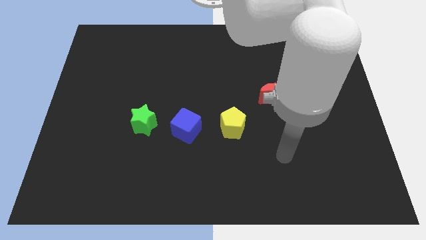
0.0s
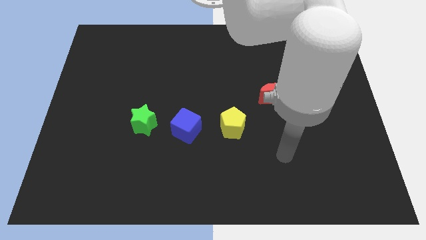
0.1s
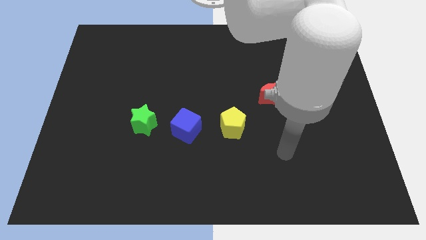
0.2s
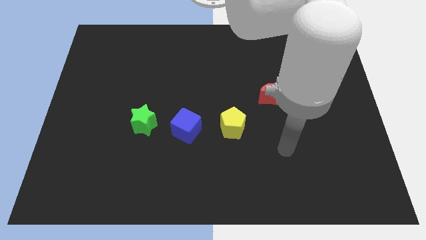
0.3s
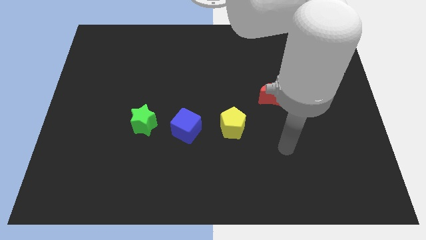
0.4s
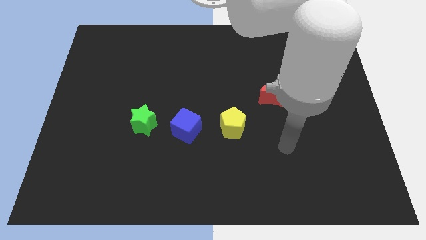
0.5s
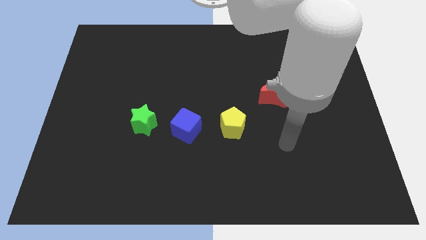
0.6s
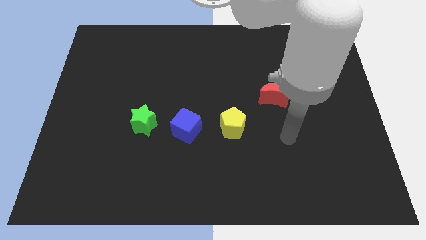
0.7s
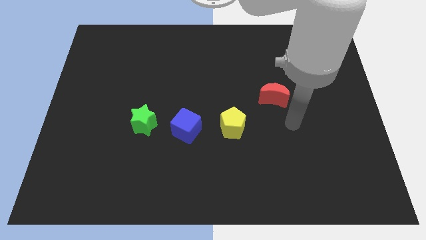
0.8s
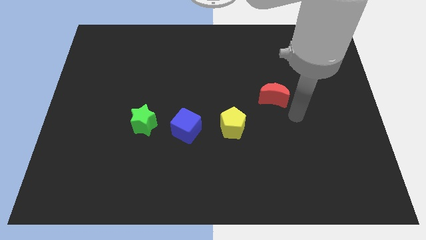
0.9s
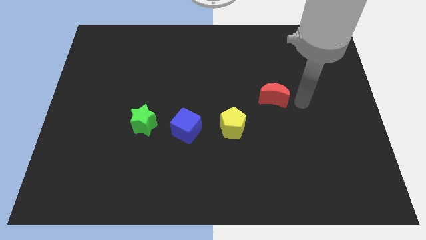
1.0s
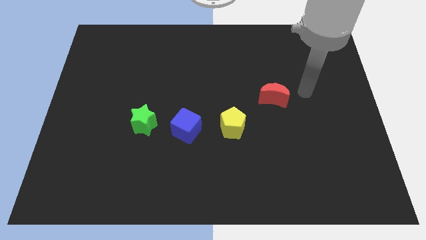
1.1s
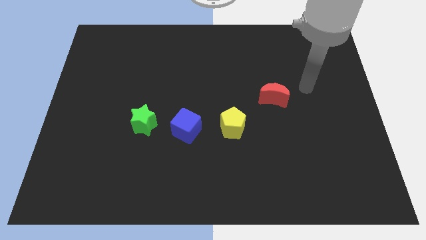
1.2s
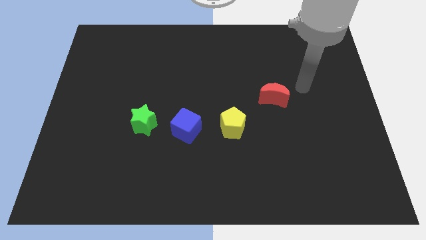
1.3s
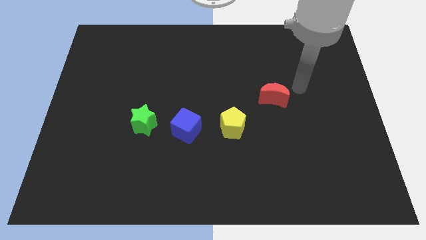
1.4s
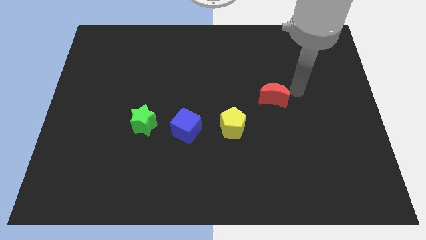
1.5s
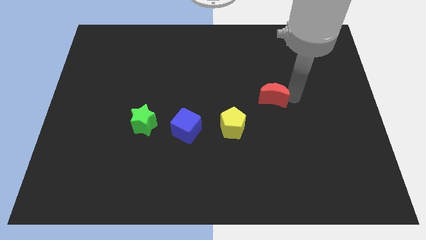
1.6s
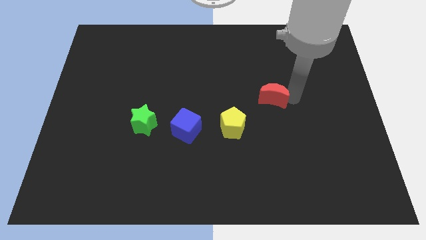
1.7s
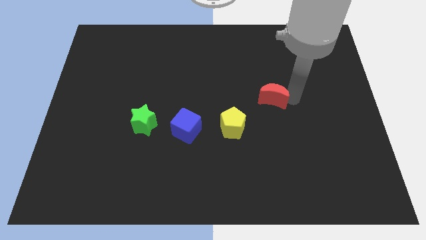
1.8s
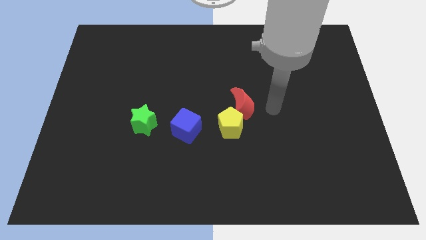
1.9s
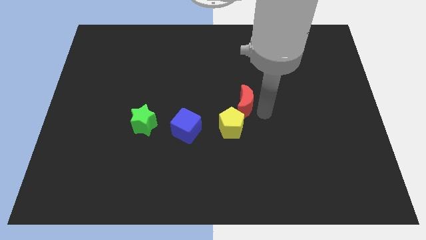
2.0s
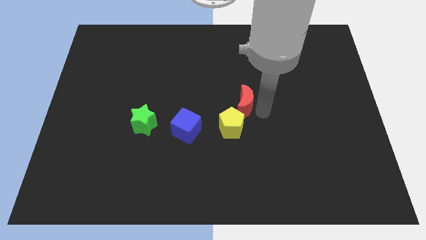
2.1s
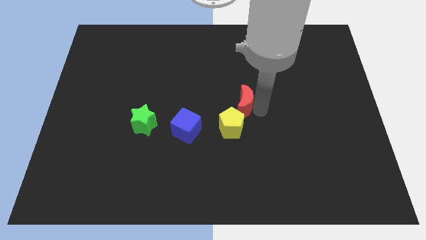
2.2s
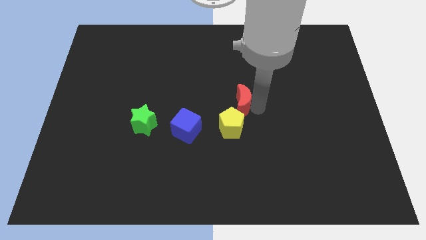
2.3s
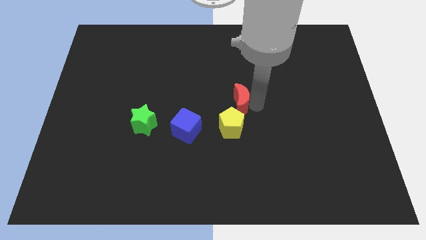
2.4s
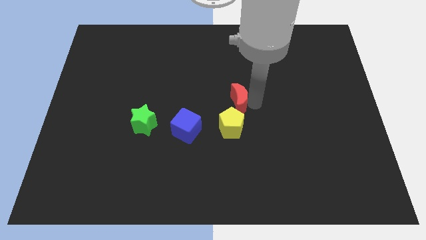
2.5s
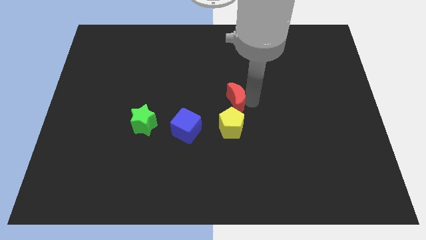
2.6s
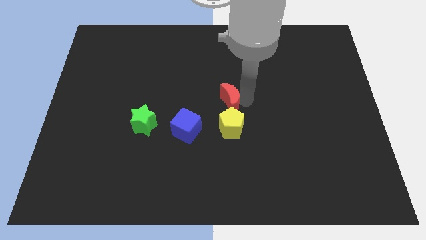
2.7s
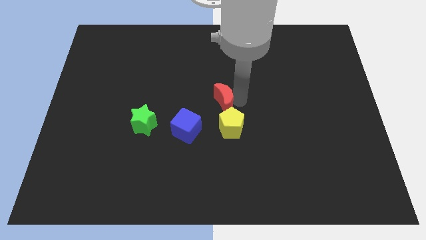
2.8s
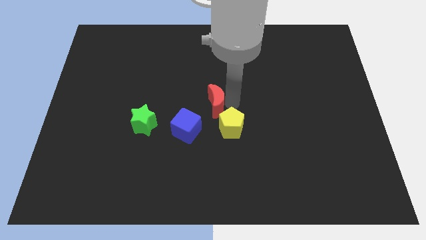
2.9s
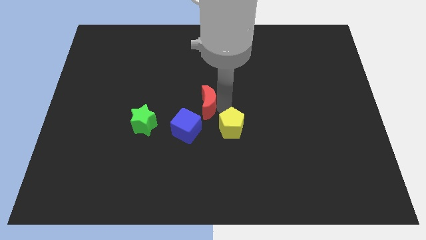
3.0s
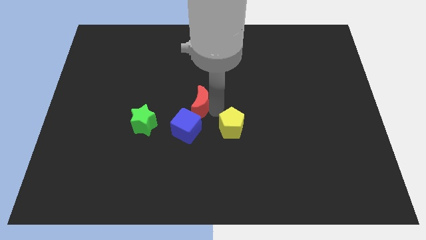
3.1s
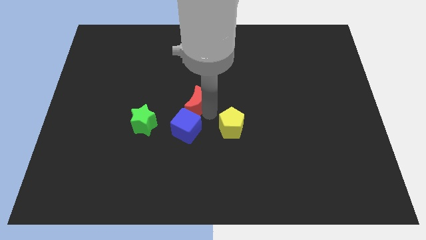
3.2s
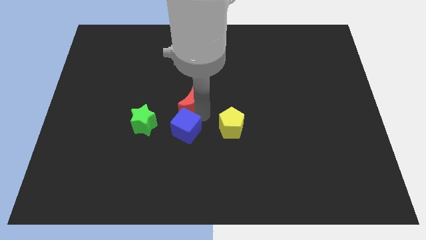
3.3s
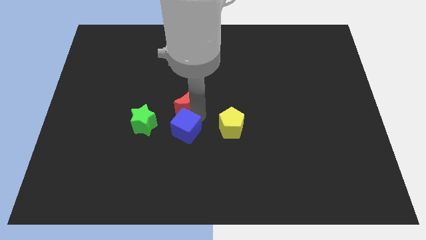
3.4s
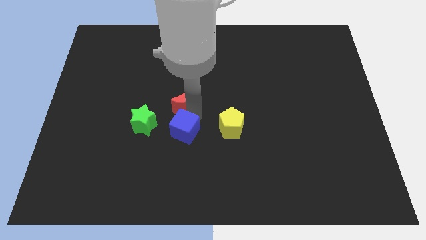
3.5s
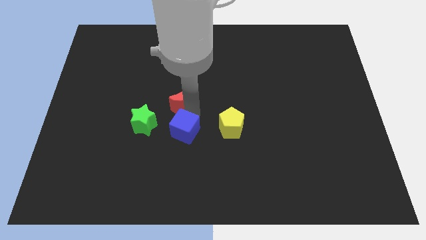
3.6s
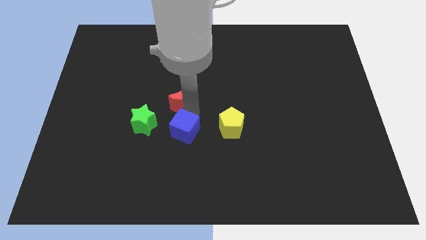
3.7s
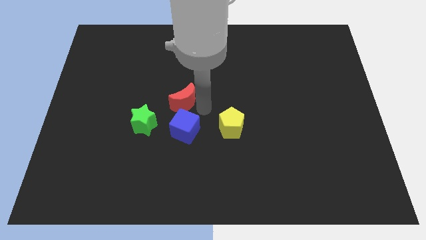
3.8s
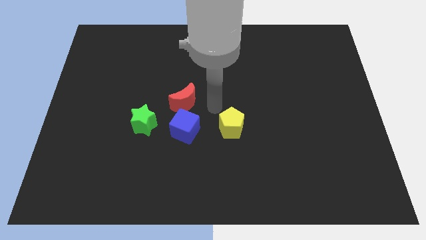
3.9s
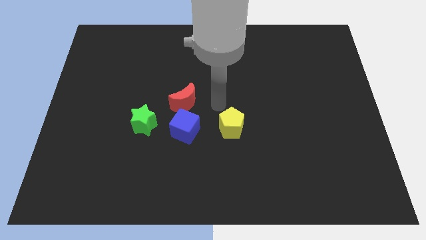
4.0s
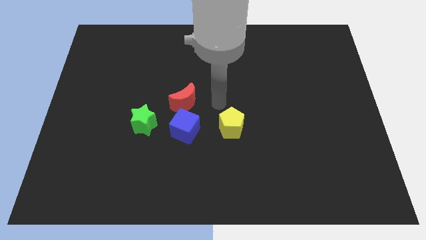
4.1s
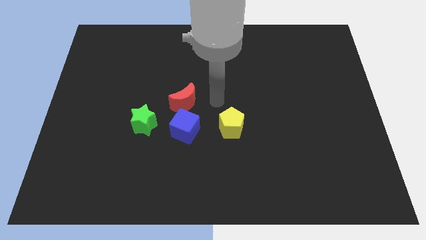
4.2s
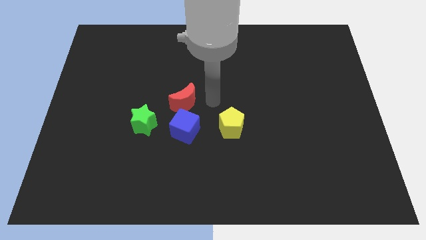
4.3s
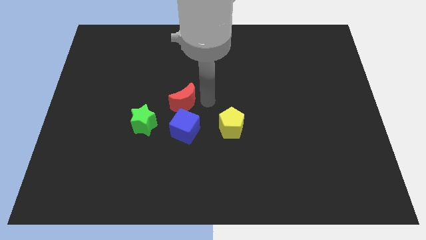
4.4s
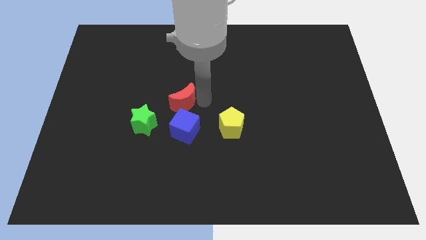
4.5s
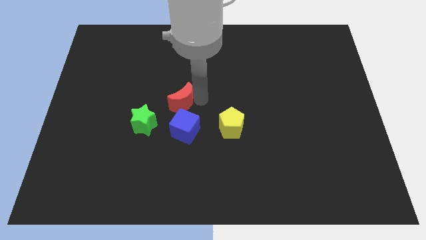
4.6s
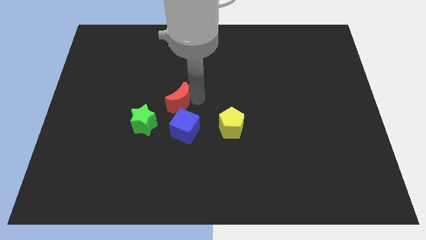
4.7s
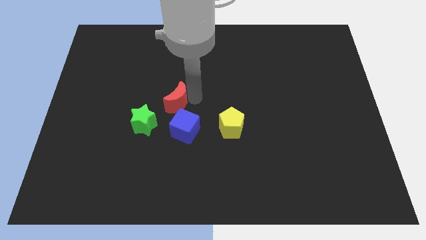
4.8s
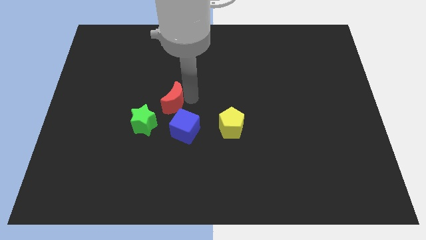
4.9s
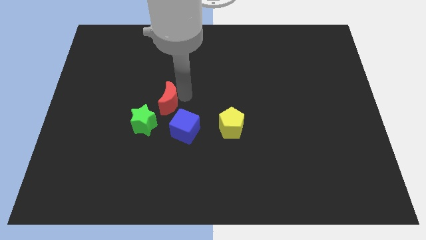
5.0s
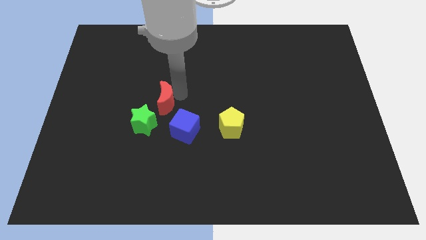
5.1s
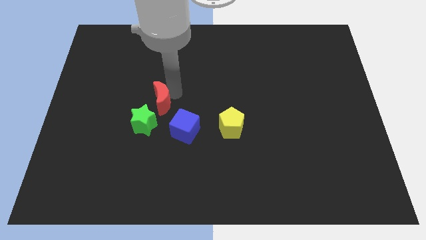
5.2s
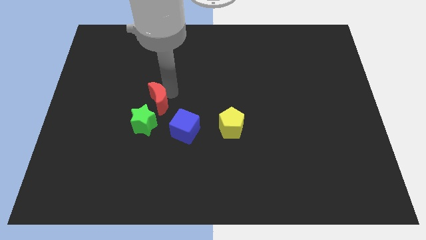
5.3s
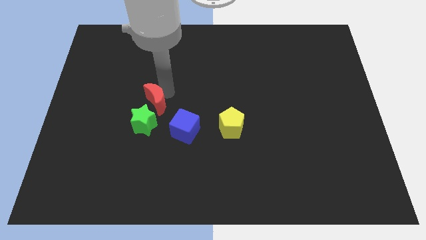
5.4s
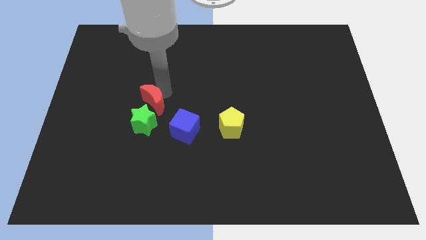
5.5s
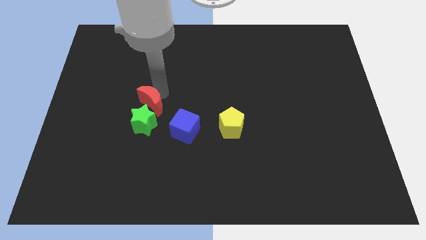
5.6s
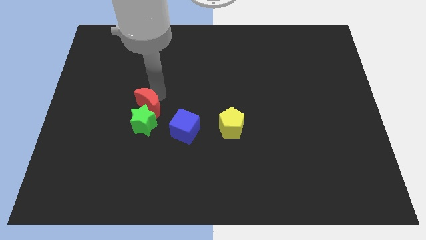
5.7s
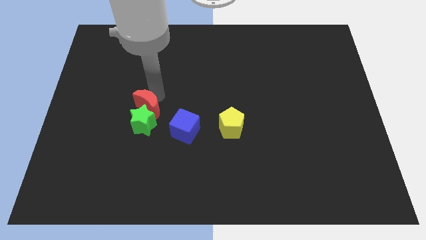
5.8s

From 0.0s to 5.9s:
put the red moon close to the green block

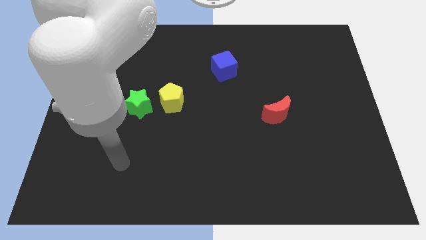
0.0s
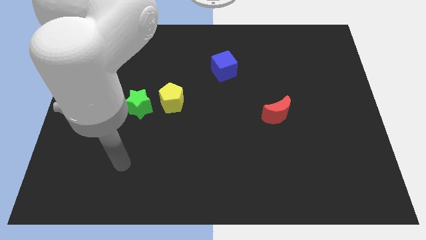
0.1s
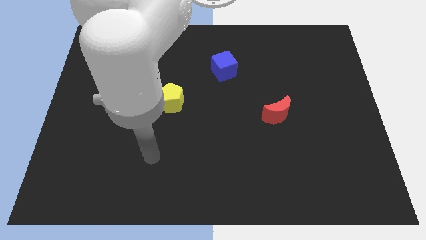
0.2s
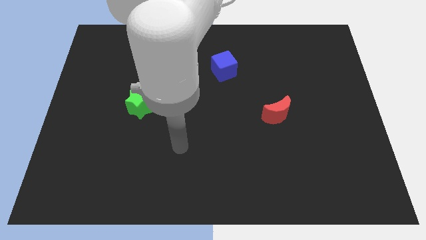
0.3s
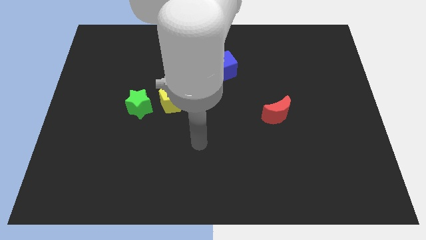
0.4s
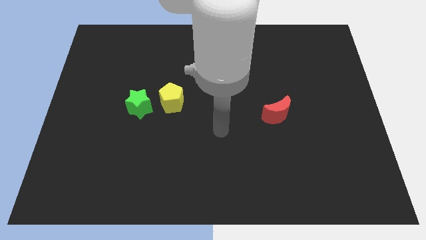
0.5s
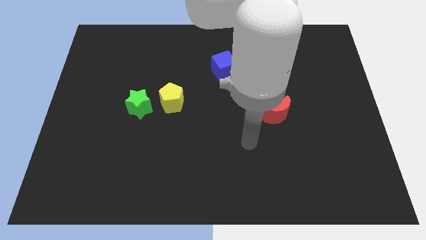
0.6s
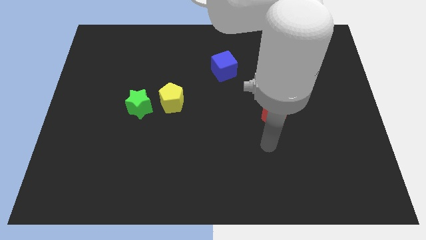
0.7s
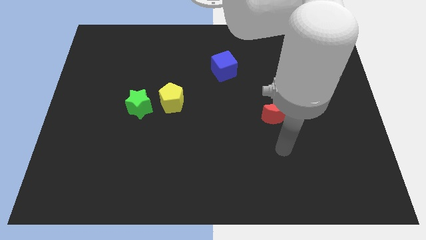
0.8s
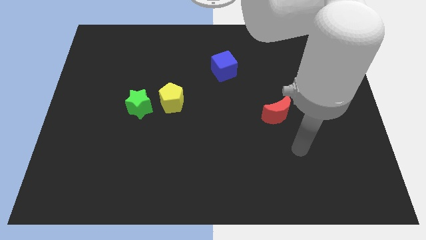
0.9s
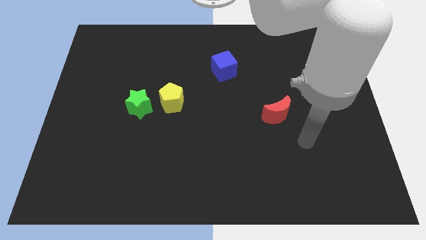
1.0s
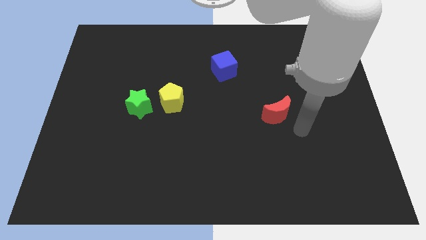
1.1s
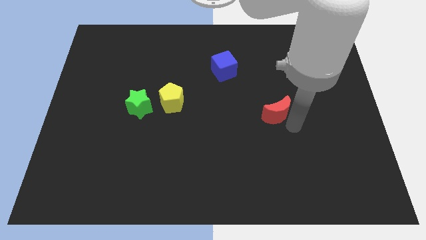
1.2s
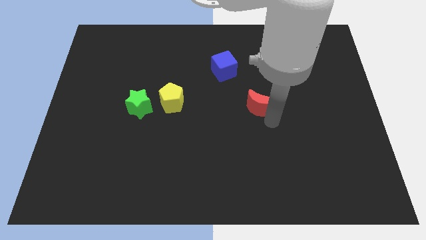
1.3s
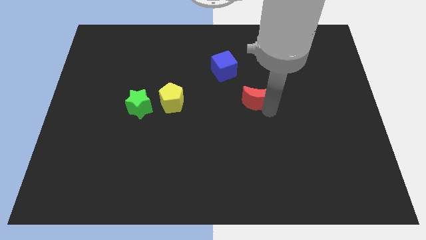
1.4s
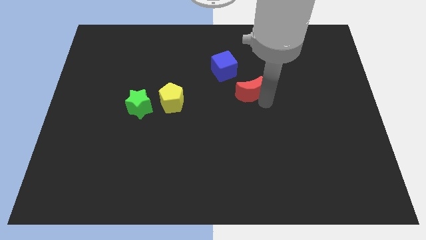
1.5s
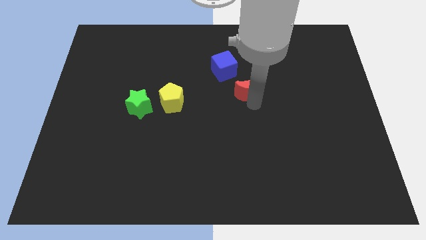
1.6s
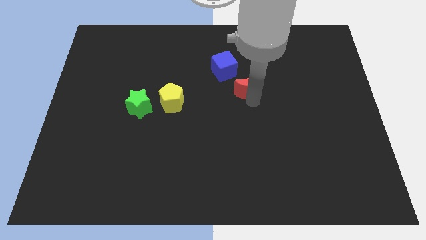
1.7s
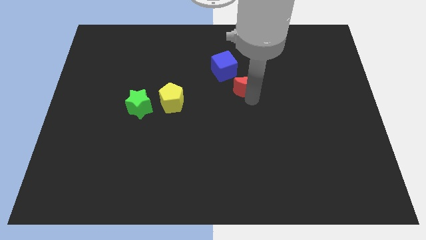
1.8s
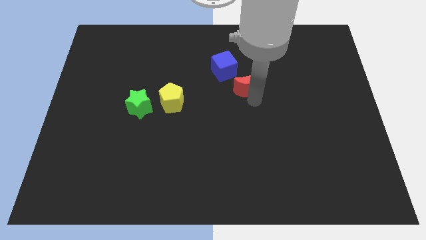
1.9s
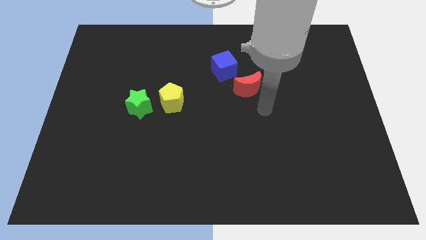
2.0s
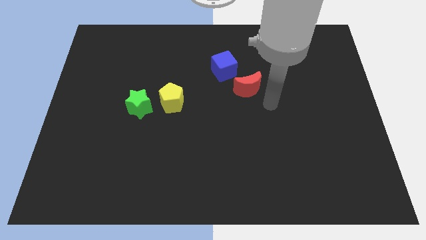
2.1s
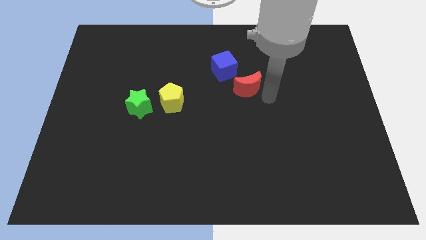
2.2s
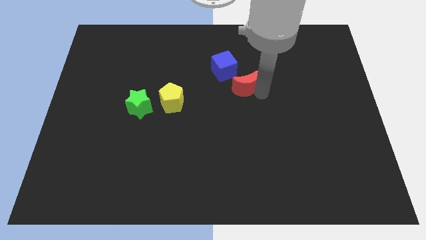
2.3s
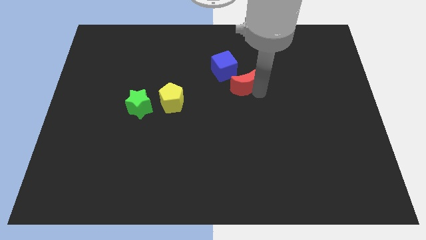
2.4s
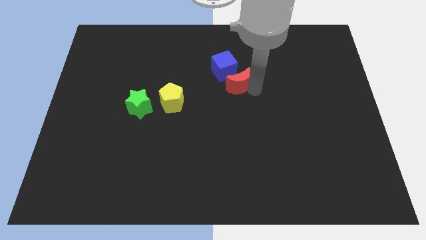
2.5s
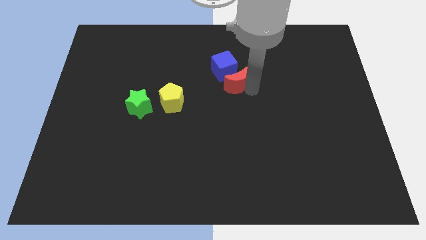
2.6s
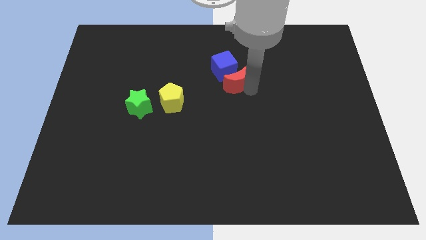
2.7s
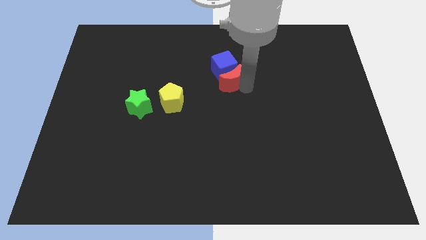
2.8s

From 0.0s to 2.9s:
slide the moon next to the cube
